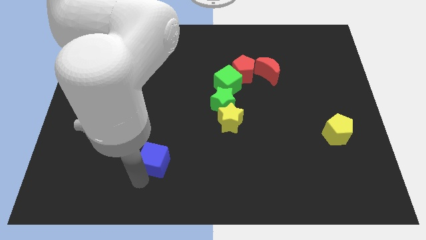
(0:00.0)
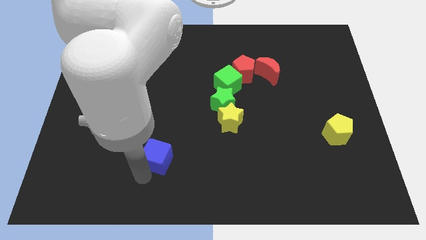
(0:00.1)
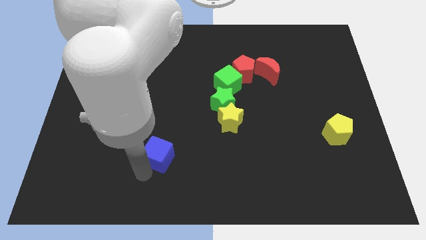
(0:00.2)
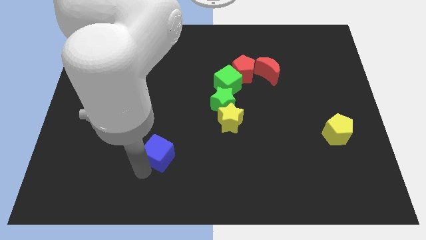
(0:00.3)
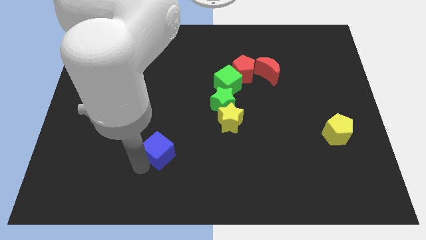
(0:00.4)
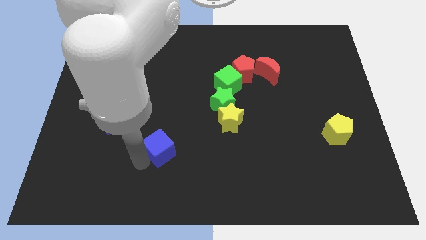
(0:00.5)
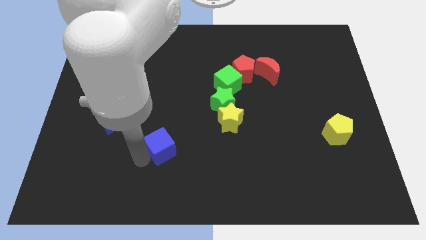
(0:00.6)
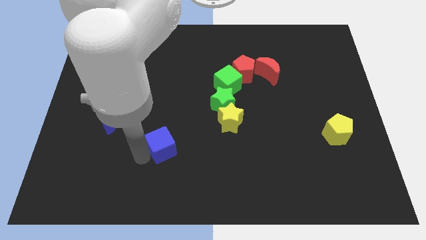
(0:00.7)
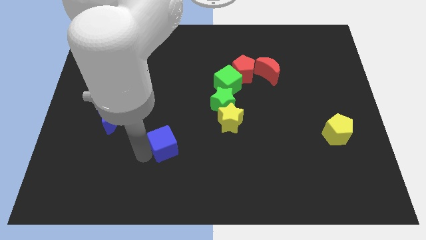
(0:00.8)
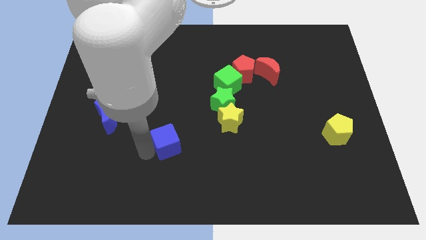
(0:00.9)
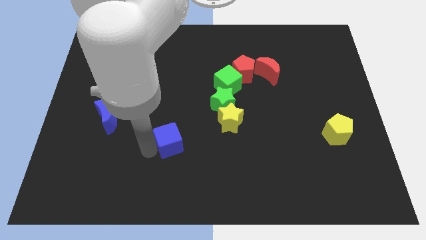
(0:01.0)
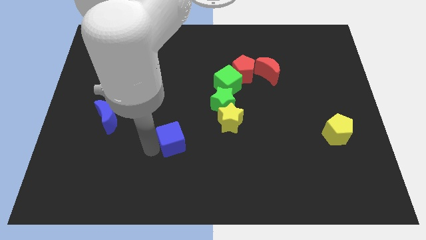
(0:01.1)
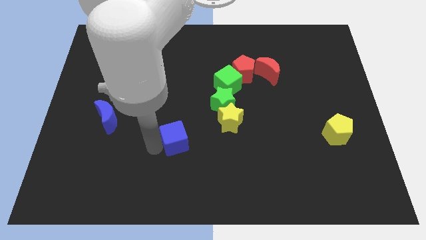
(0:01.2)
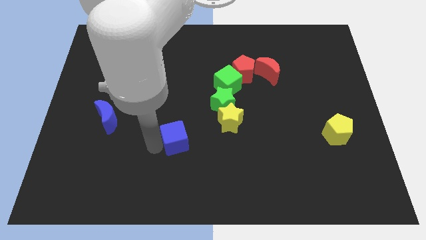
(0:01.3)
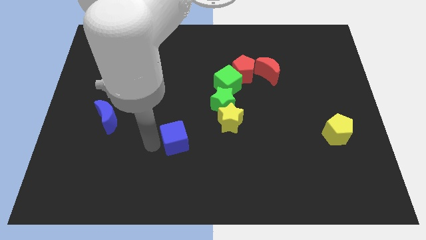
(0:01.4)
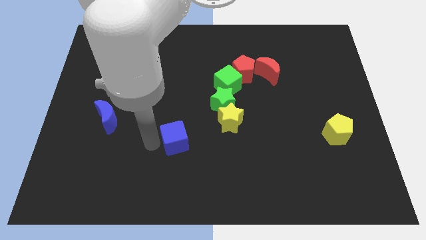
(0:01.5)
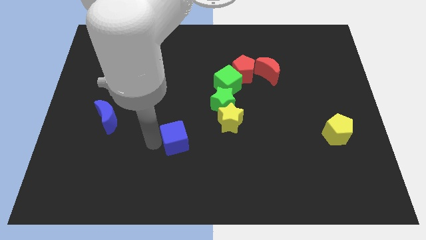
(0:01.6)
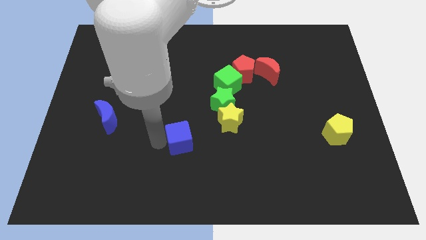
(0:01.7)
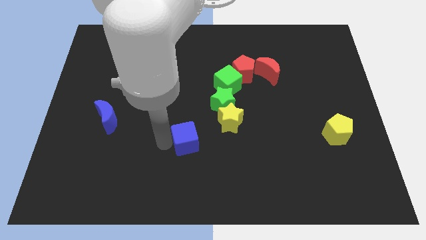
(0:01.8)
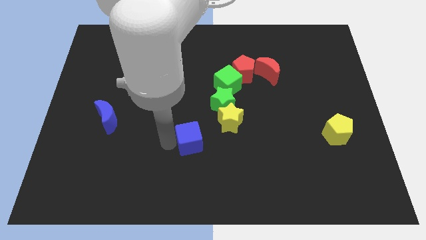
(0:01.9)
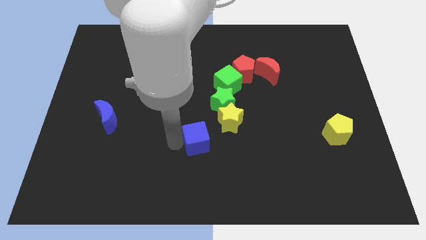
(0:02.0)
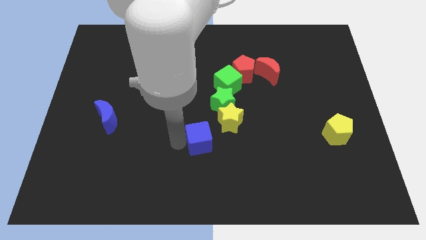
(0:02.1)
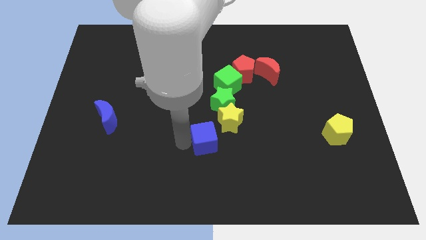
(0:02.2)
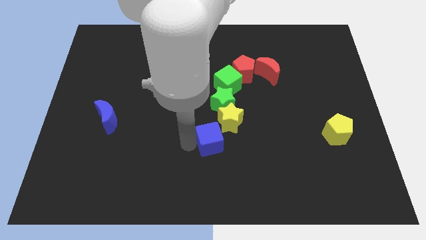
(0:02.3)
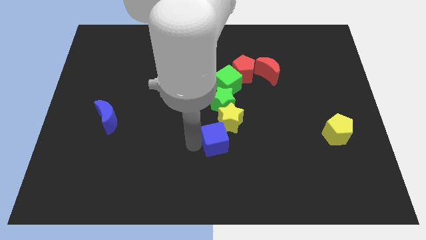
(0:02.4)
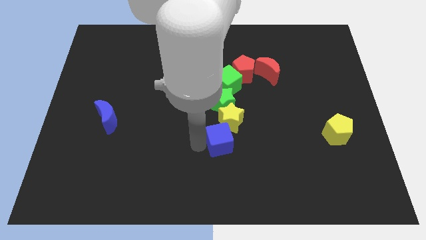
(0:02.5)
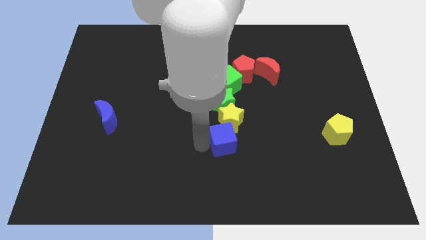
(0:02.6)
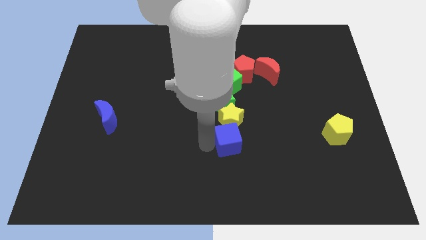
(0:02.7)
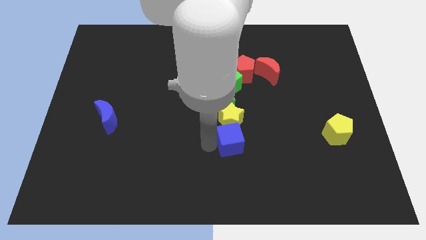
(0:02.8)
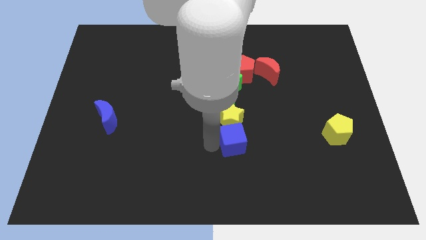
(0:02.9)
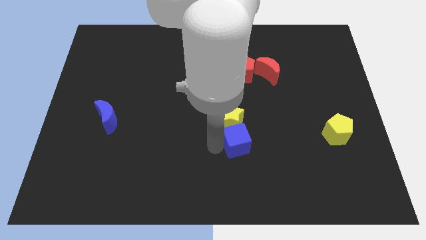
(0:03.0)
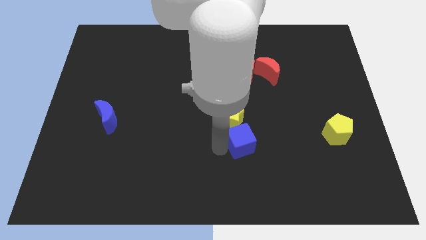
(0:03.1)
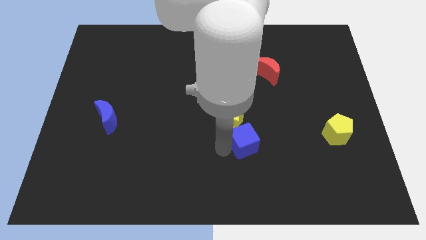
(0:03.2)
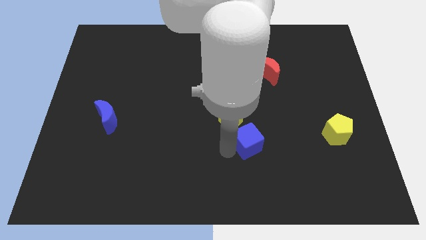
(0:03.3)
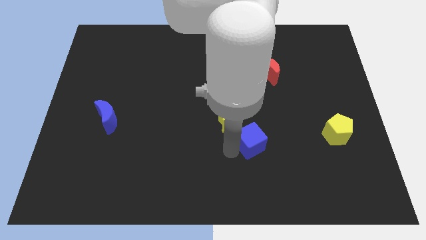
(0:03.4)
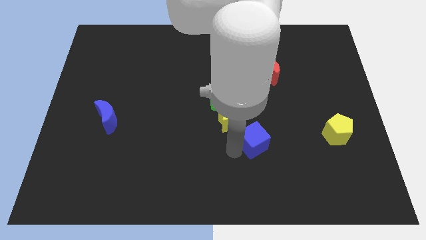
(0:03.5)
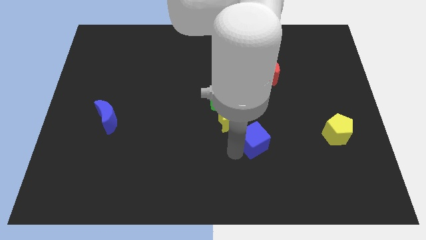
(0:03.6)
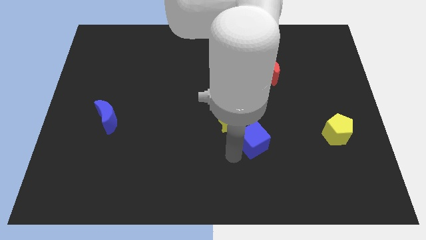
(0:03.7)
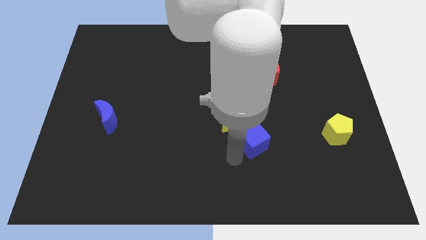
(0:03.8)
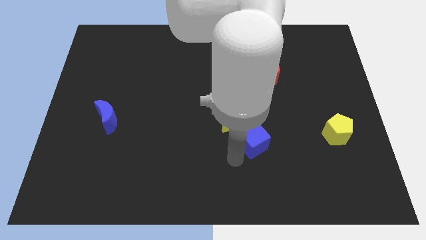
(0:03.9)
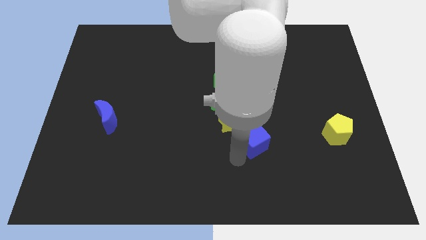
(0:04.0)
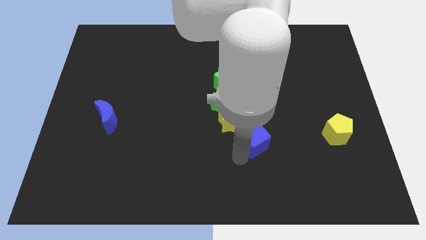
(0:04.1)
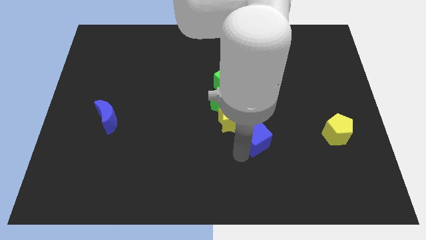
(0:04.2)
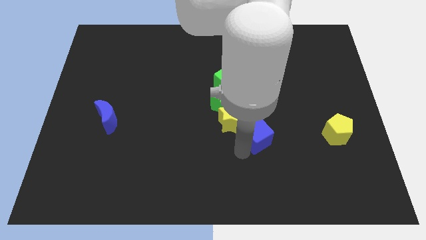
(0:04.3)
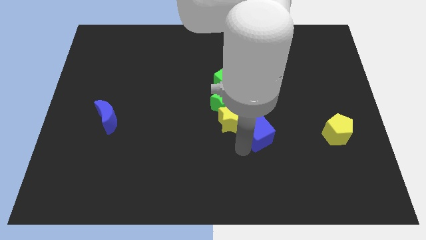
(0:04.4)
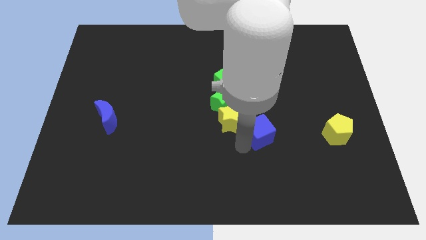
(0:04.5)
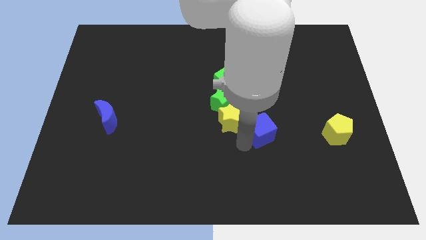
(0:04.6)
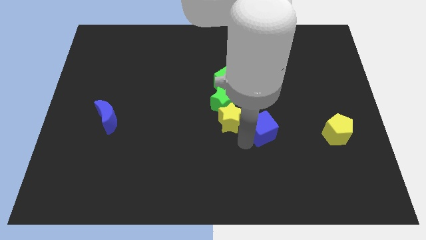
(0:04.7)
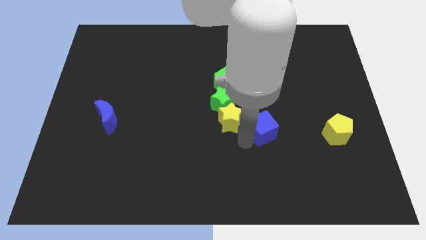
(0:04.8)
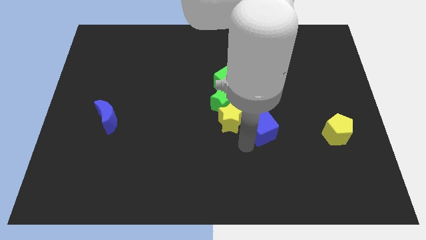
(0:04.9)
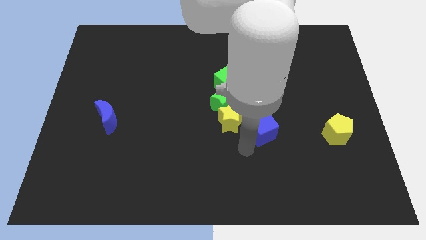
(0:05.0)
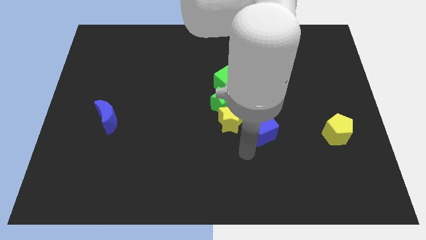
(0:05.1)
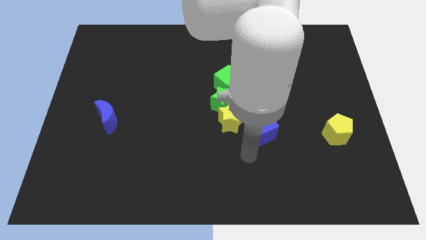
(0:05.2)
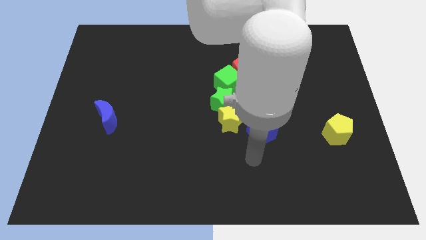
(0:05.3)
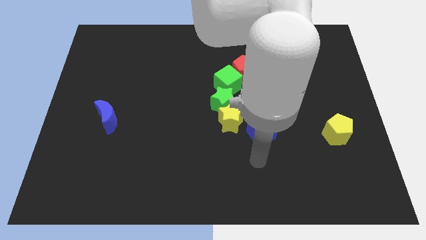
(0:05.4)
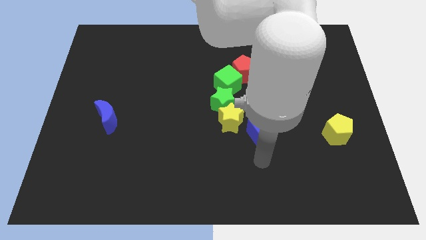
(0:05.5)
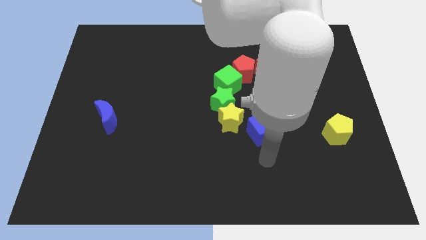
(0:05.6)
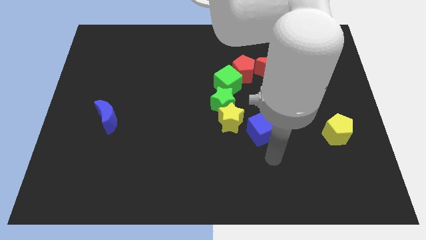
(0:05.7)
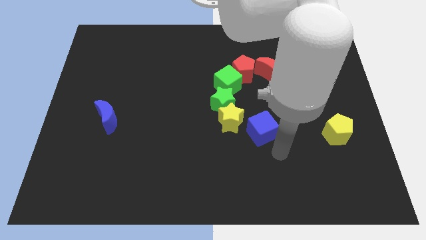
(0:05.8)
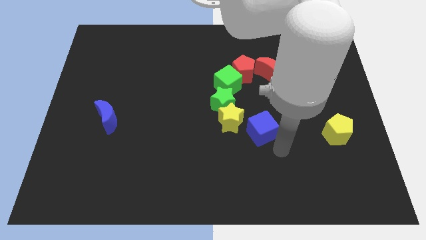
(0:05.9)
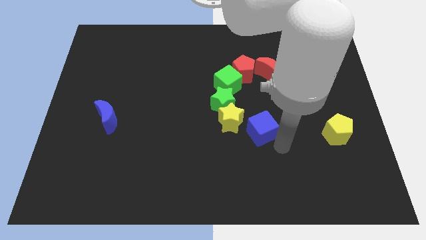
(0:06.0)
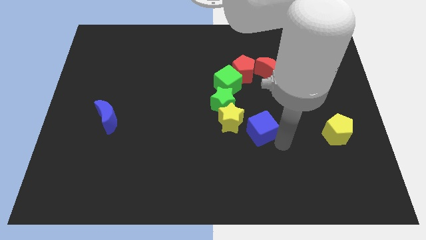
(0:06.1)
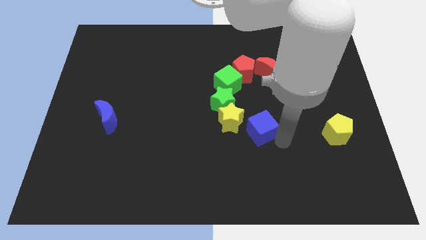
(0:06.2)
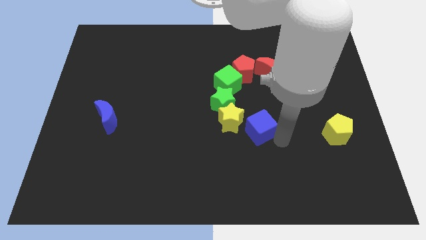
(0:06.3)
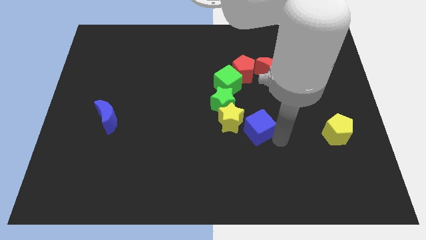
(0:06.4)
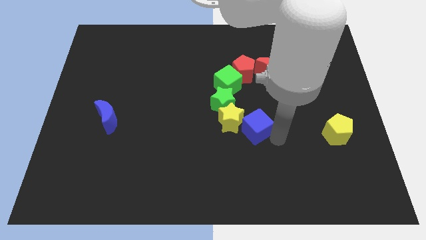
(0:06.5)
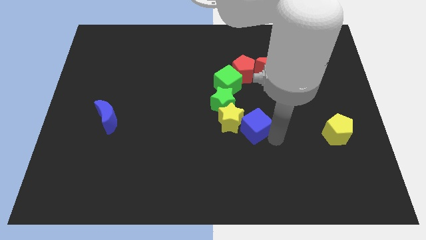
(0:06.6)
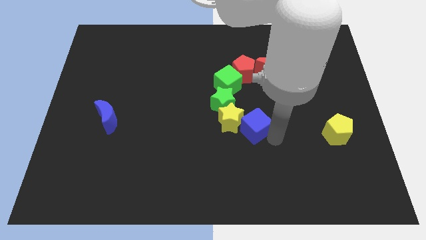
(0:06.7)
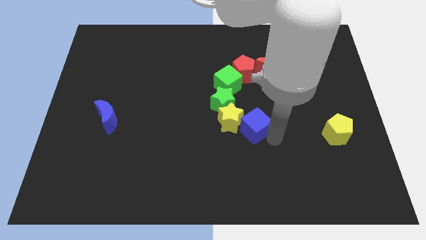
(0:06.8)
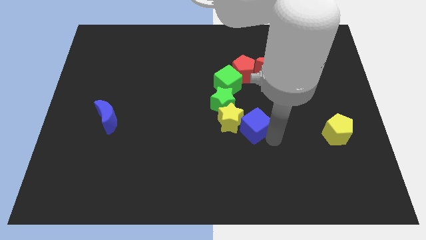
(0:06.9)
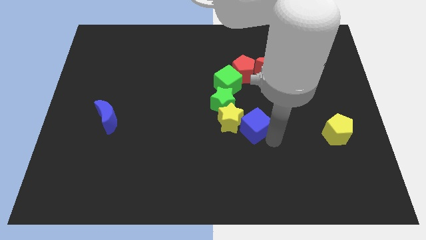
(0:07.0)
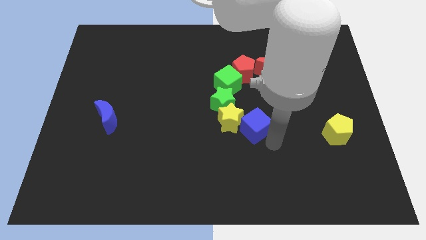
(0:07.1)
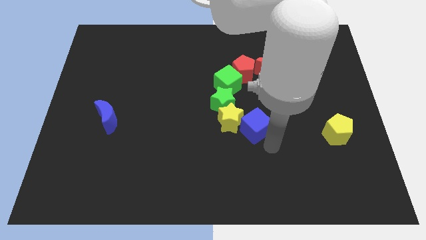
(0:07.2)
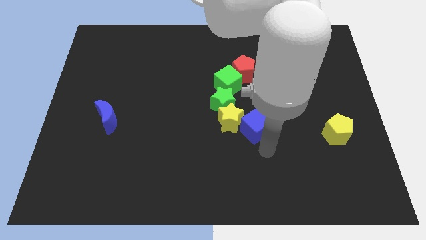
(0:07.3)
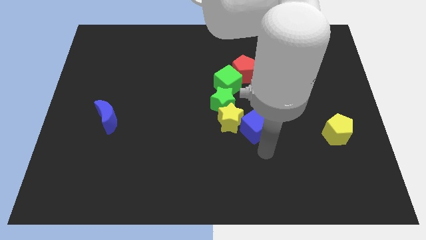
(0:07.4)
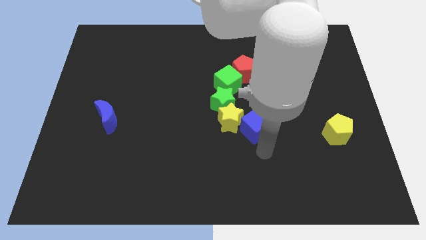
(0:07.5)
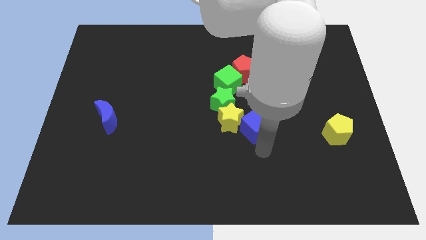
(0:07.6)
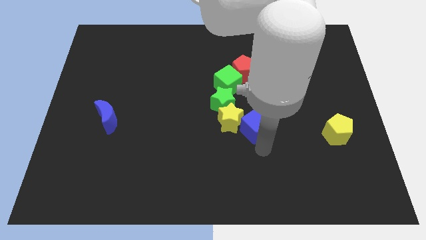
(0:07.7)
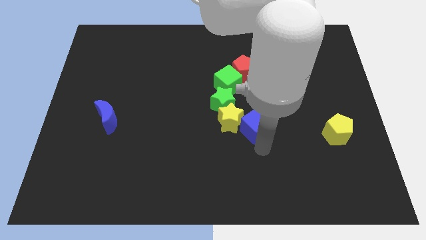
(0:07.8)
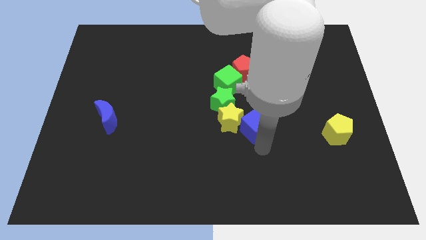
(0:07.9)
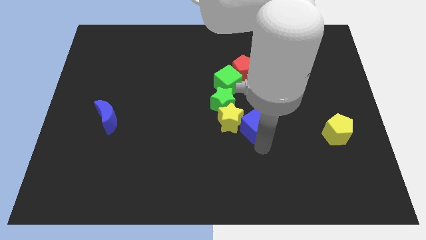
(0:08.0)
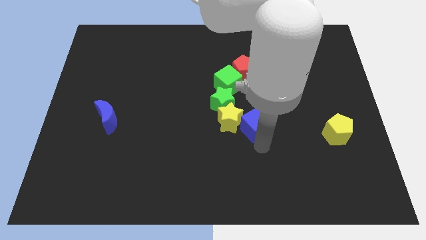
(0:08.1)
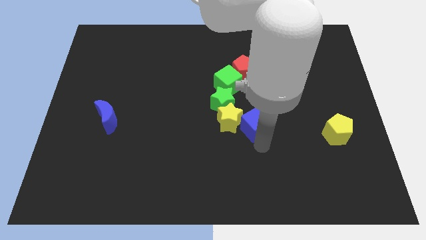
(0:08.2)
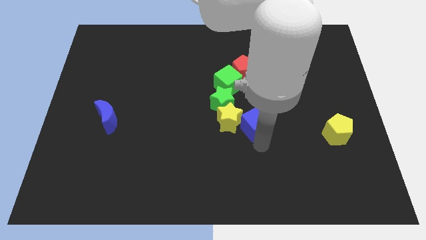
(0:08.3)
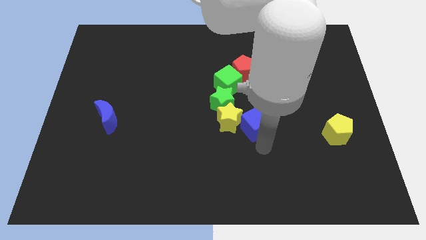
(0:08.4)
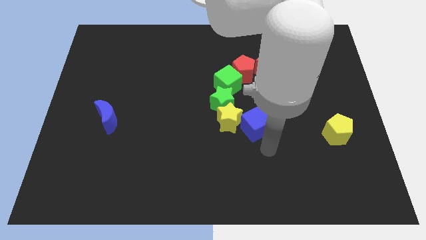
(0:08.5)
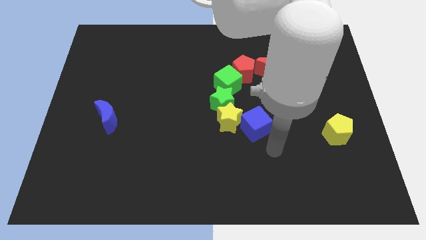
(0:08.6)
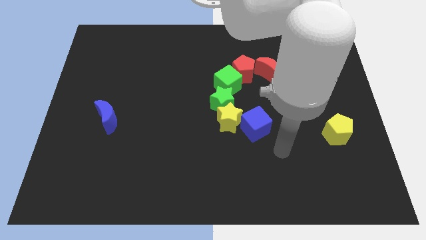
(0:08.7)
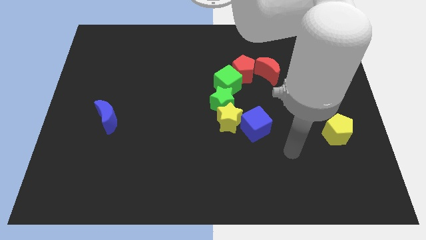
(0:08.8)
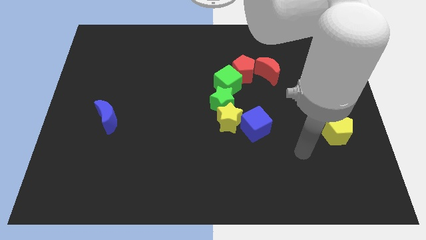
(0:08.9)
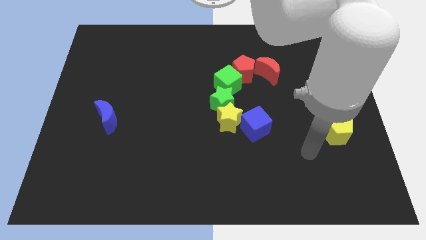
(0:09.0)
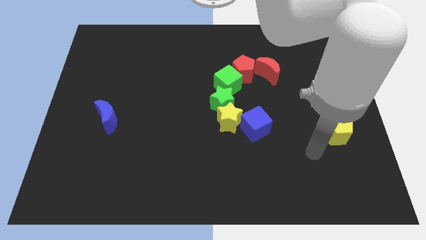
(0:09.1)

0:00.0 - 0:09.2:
push the blue cube to the right side of the yellow star
